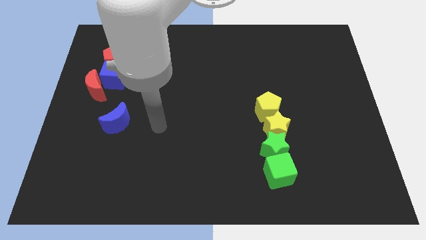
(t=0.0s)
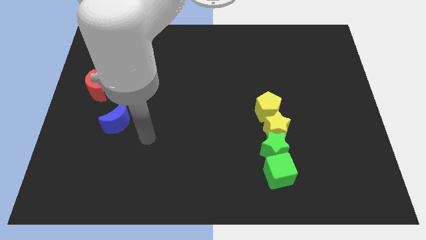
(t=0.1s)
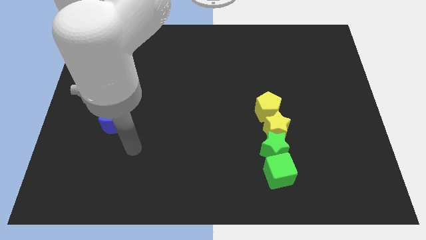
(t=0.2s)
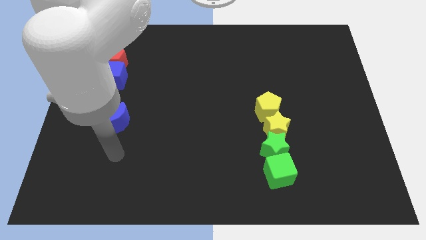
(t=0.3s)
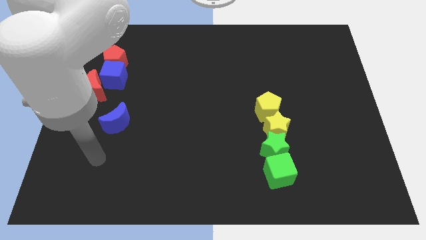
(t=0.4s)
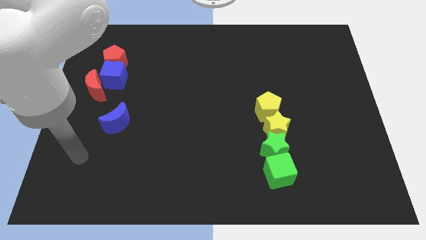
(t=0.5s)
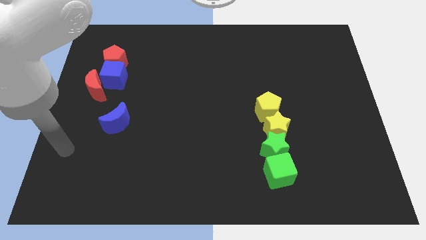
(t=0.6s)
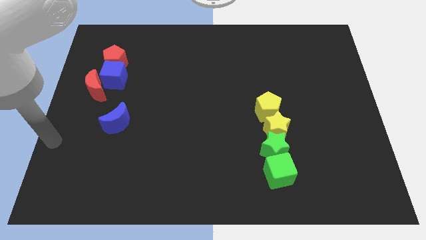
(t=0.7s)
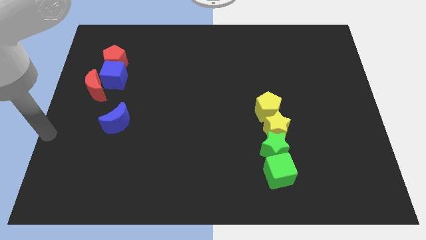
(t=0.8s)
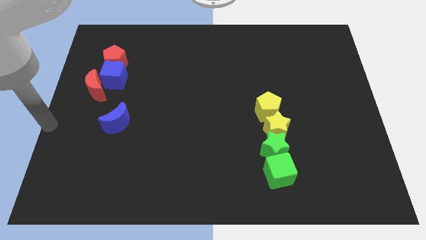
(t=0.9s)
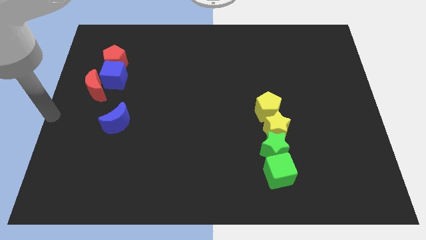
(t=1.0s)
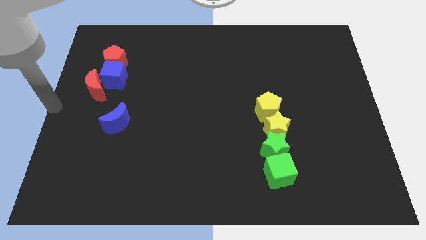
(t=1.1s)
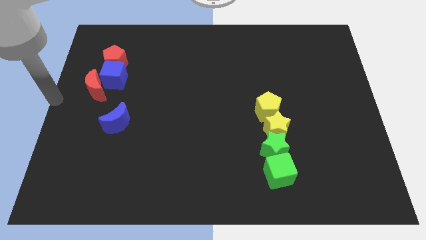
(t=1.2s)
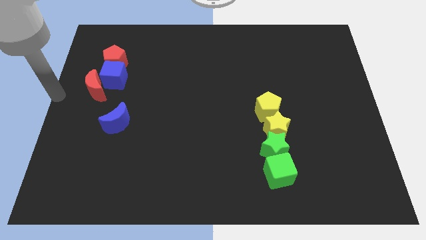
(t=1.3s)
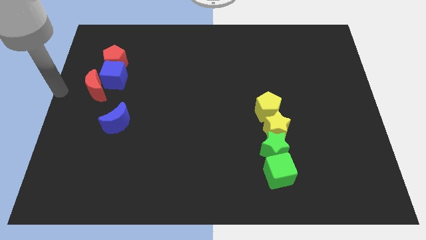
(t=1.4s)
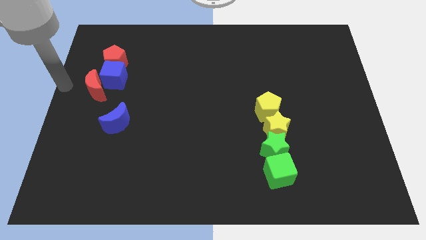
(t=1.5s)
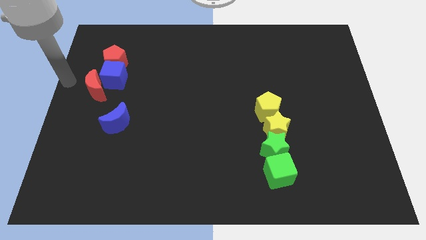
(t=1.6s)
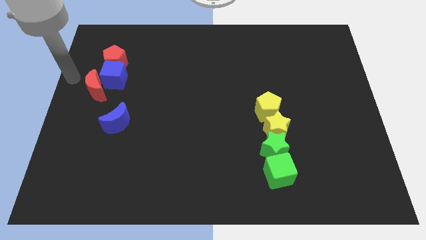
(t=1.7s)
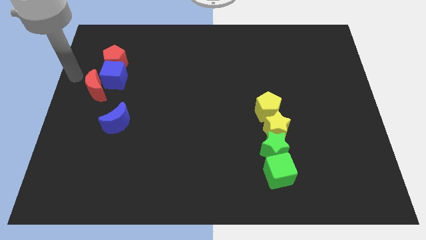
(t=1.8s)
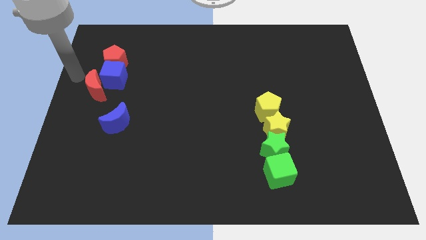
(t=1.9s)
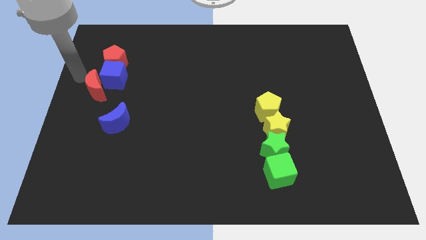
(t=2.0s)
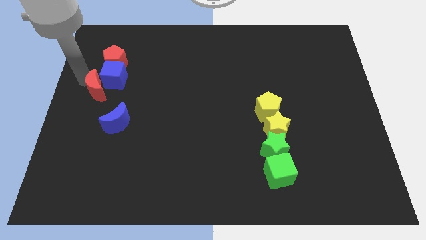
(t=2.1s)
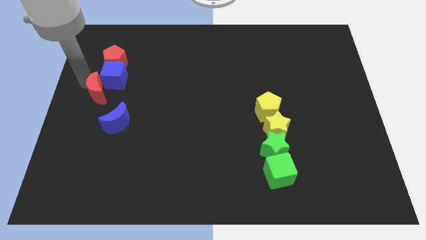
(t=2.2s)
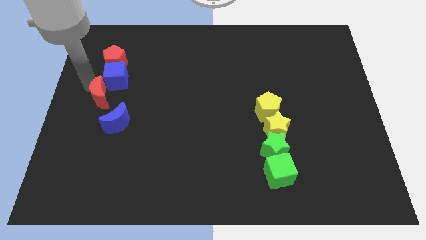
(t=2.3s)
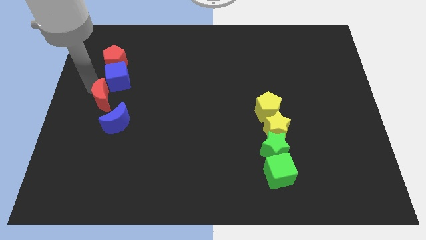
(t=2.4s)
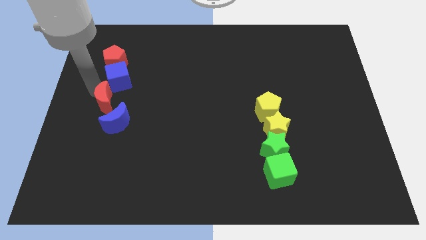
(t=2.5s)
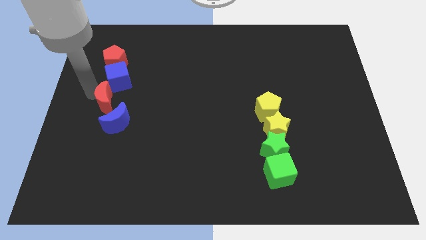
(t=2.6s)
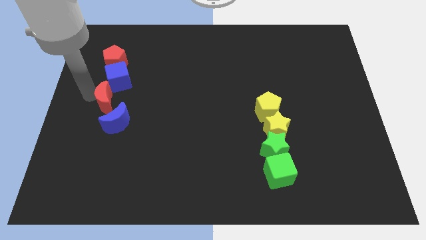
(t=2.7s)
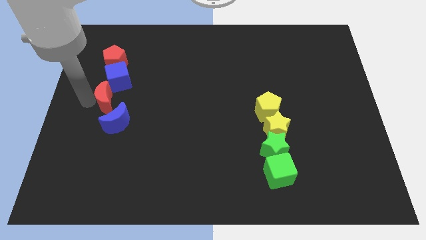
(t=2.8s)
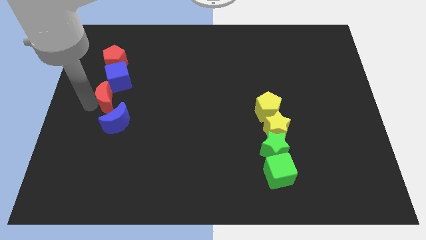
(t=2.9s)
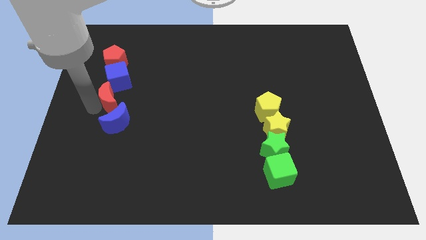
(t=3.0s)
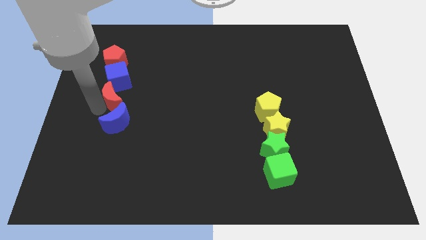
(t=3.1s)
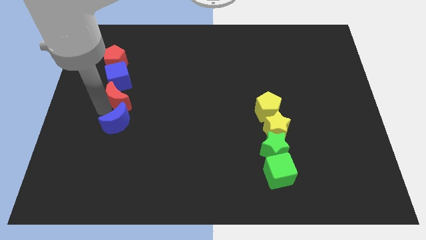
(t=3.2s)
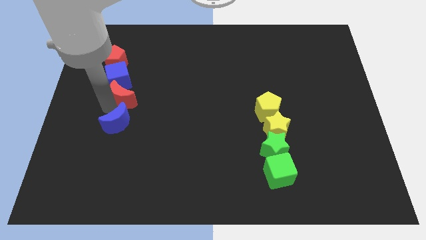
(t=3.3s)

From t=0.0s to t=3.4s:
place the red moon in between blue blocks

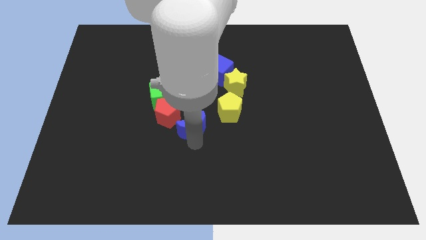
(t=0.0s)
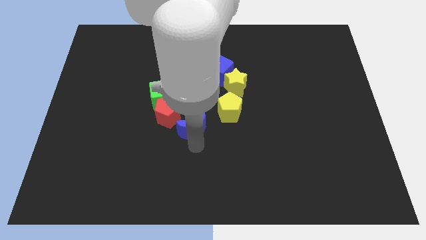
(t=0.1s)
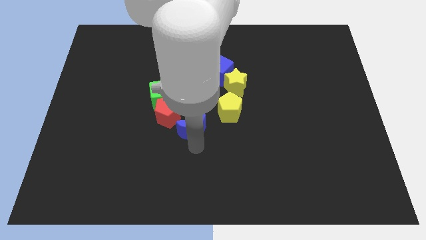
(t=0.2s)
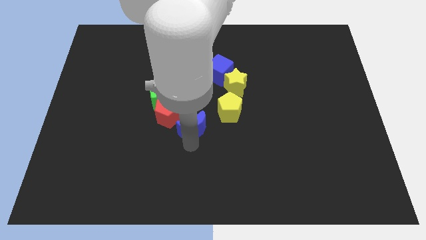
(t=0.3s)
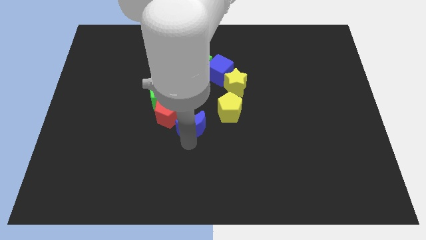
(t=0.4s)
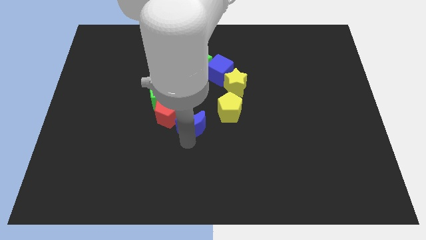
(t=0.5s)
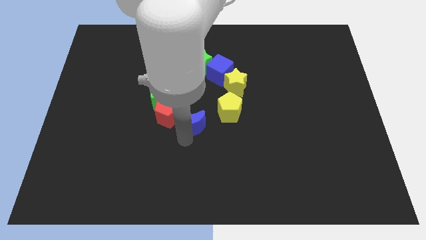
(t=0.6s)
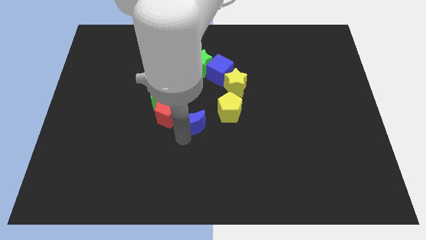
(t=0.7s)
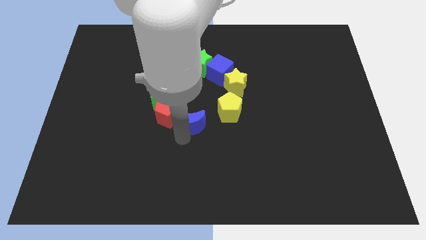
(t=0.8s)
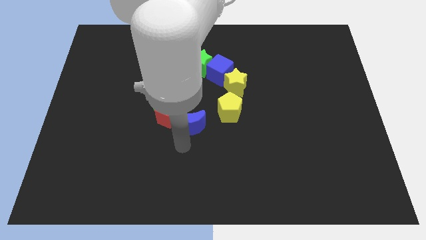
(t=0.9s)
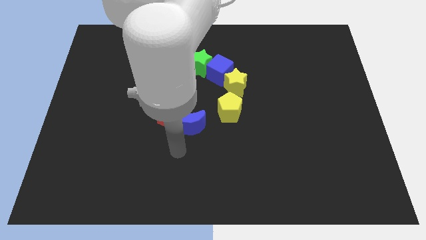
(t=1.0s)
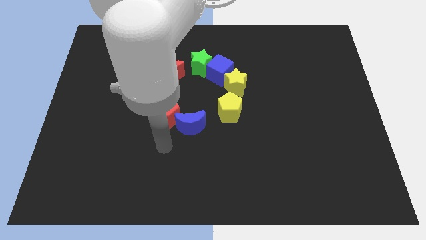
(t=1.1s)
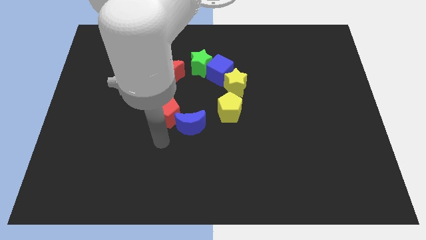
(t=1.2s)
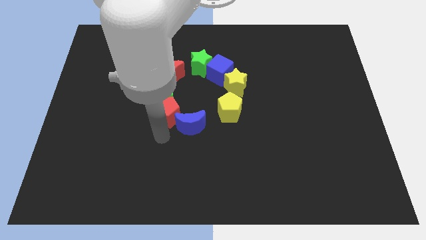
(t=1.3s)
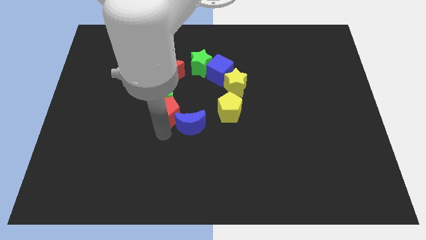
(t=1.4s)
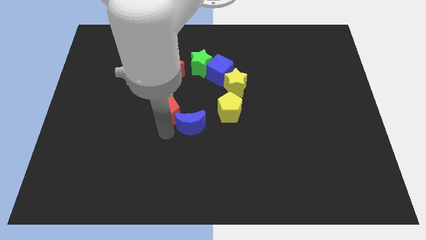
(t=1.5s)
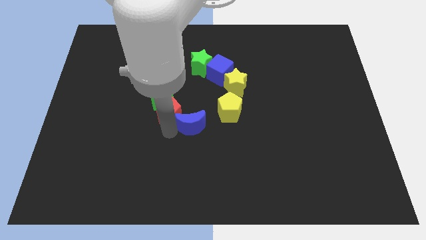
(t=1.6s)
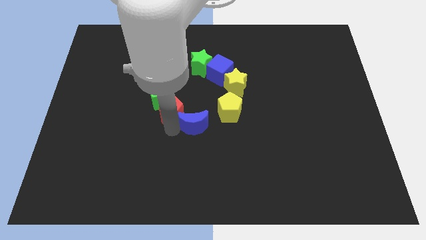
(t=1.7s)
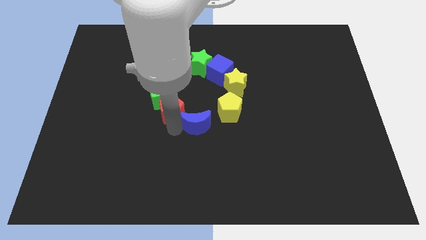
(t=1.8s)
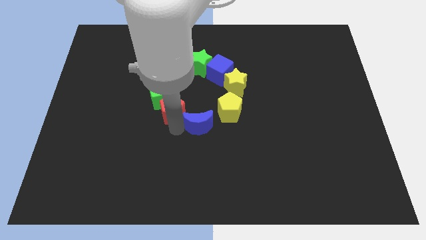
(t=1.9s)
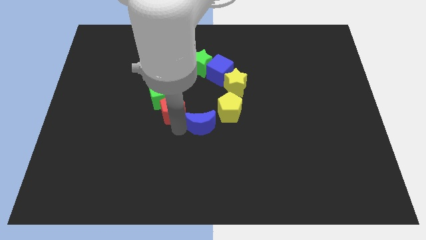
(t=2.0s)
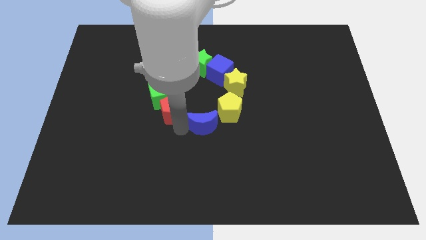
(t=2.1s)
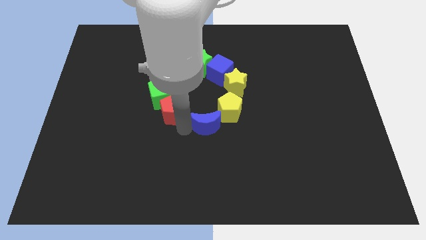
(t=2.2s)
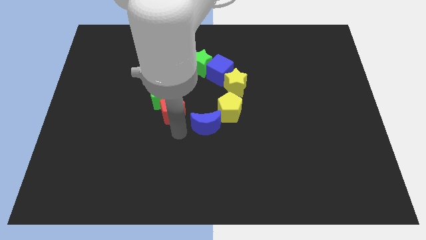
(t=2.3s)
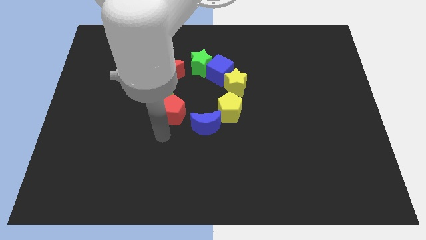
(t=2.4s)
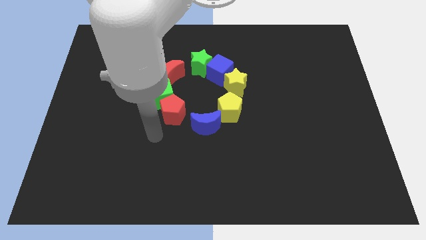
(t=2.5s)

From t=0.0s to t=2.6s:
complete the circle using blue crescent at center of the board

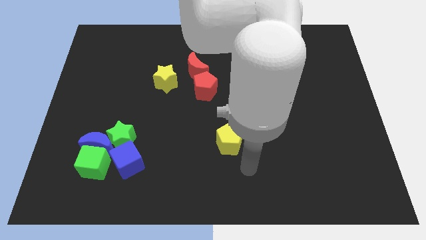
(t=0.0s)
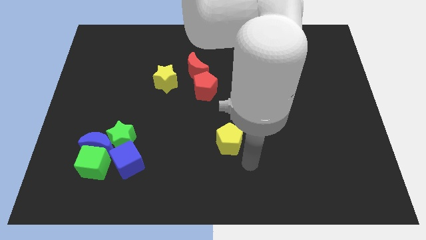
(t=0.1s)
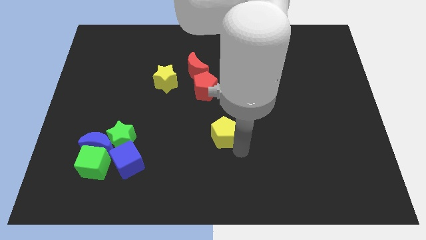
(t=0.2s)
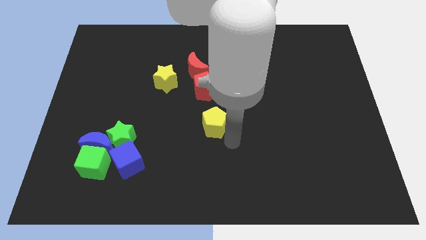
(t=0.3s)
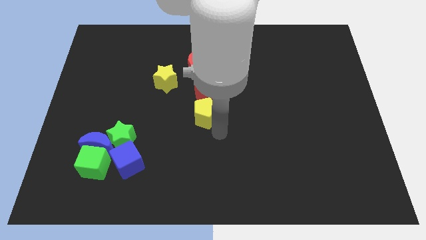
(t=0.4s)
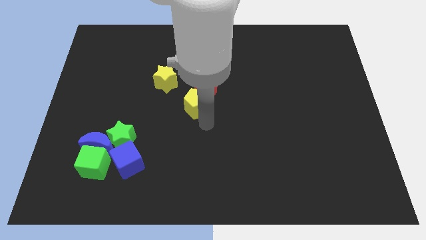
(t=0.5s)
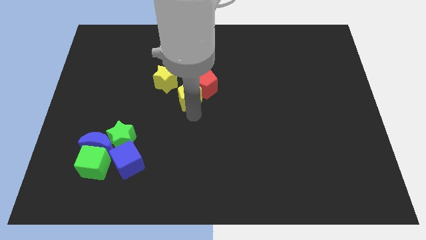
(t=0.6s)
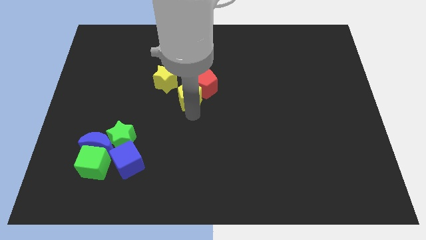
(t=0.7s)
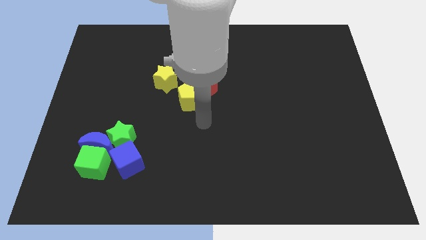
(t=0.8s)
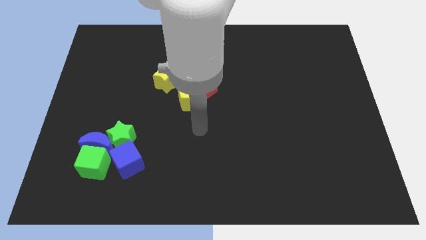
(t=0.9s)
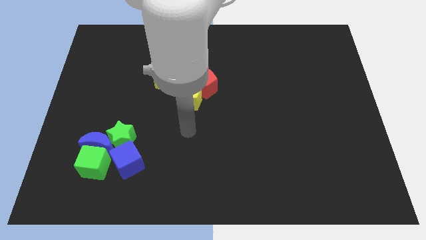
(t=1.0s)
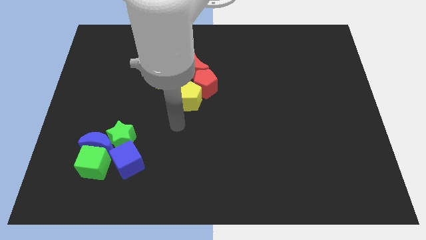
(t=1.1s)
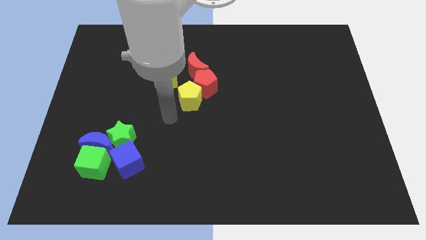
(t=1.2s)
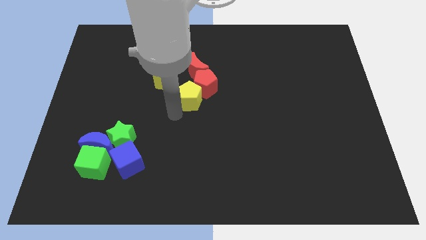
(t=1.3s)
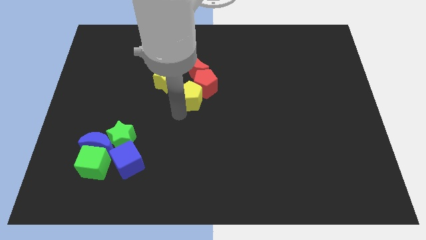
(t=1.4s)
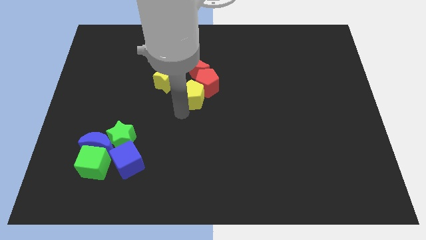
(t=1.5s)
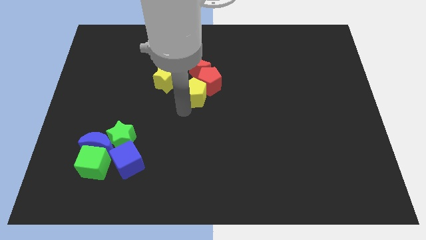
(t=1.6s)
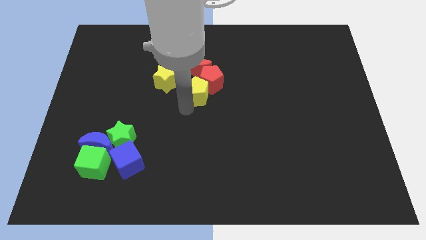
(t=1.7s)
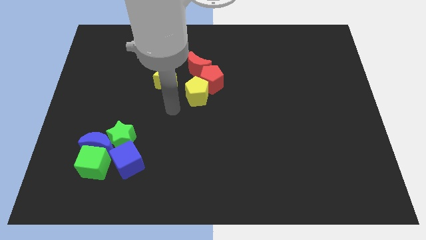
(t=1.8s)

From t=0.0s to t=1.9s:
push the yellow pentagon into red pentagon

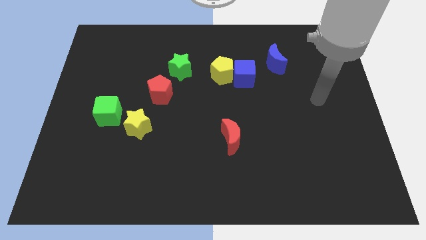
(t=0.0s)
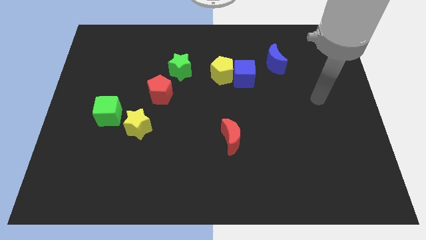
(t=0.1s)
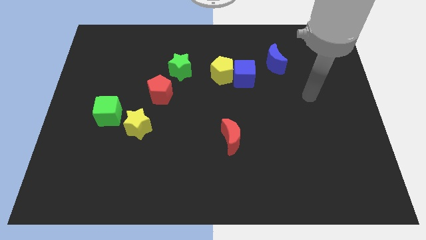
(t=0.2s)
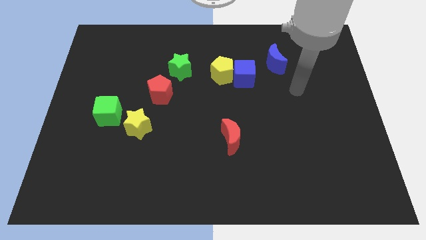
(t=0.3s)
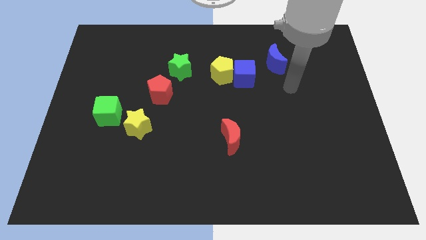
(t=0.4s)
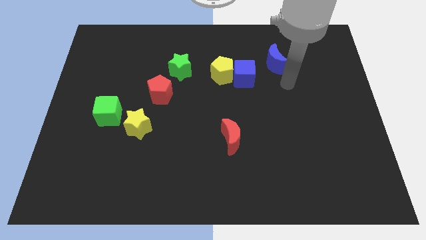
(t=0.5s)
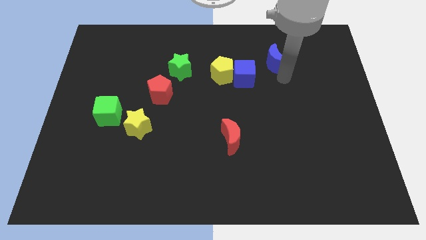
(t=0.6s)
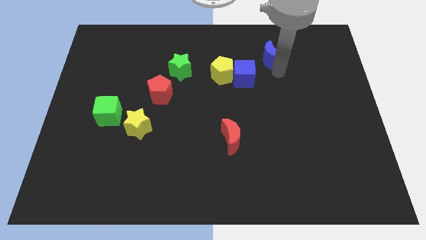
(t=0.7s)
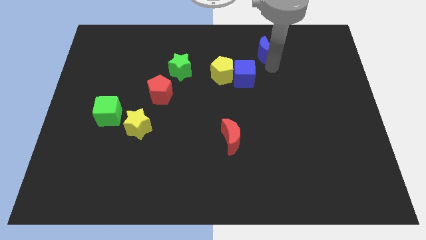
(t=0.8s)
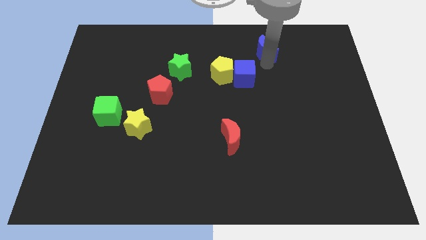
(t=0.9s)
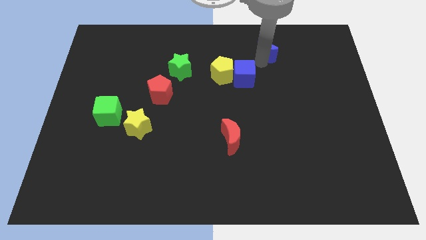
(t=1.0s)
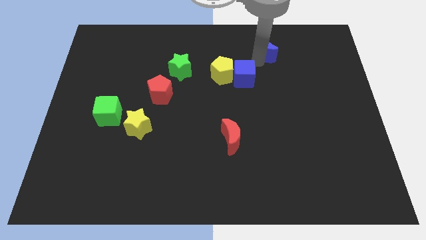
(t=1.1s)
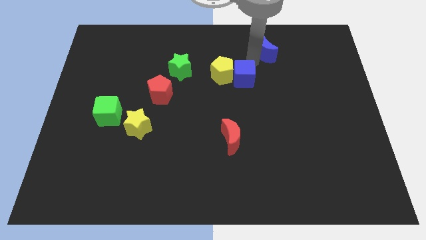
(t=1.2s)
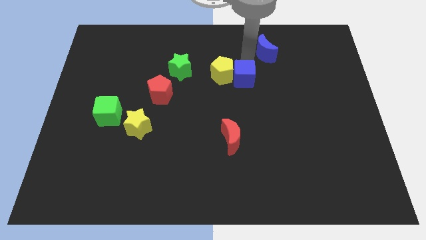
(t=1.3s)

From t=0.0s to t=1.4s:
push the blue moon upwards slightly
